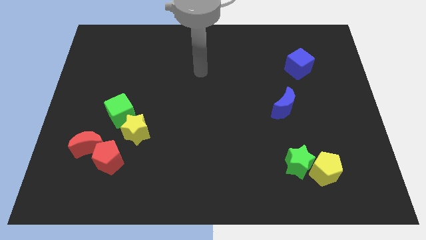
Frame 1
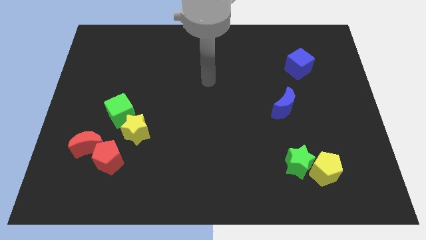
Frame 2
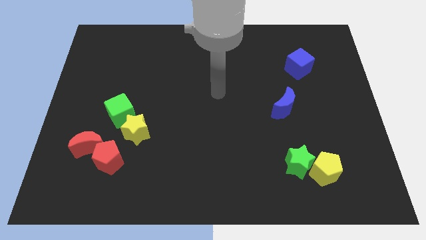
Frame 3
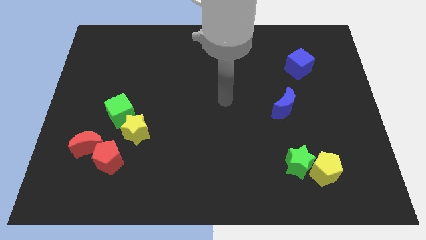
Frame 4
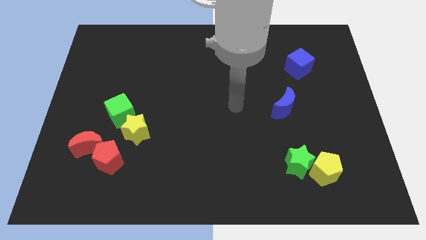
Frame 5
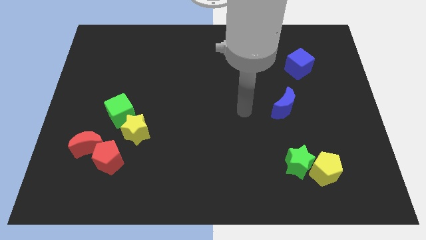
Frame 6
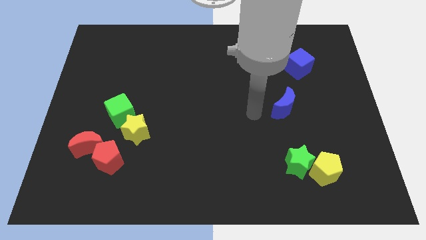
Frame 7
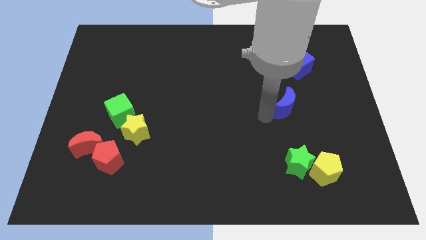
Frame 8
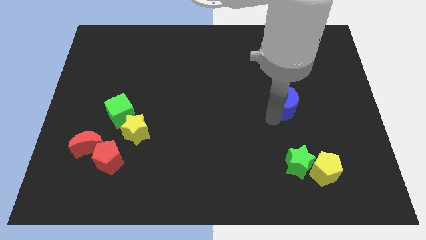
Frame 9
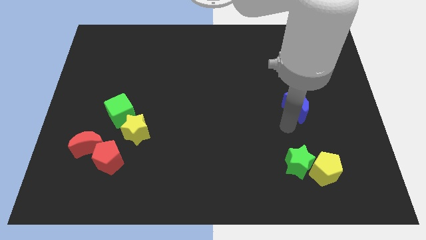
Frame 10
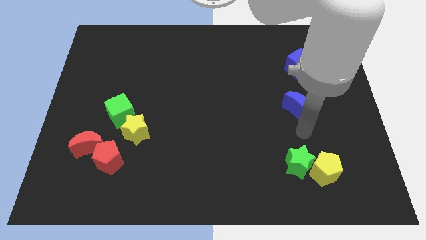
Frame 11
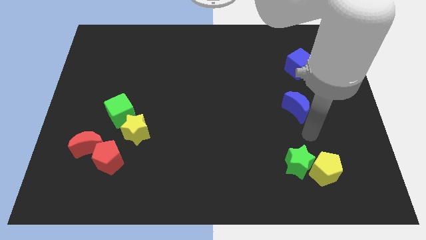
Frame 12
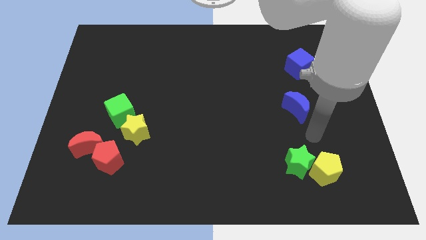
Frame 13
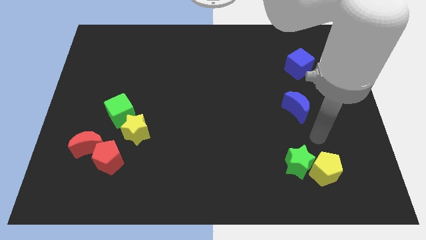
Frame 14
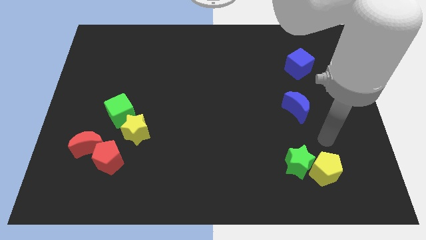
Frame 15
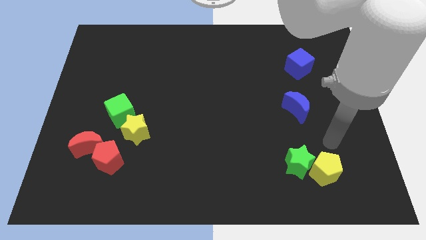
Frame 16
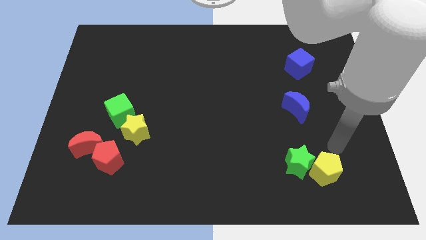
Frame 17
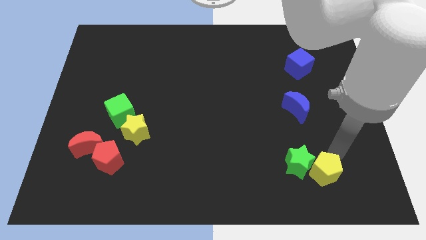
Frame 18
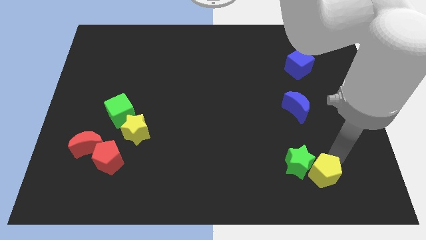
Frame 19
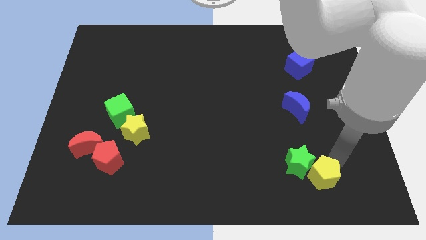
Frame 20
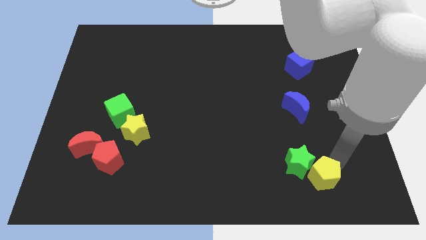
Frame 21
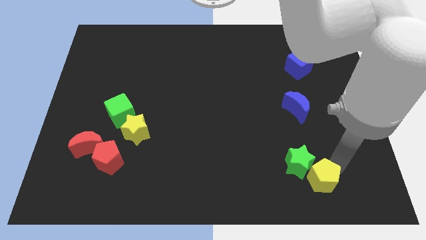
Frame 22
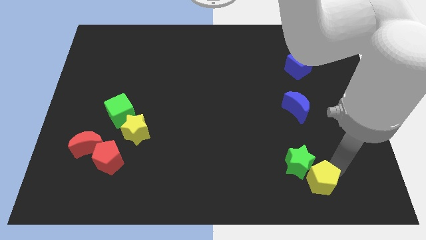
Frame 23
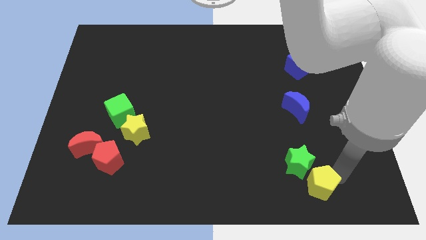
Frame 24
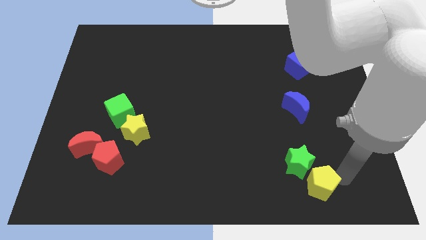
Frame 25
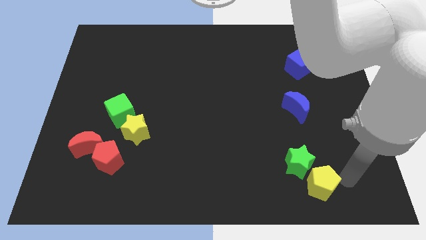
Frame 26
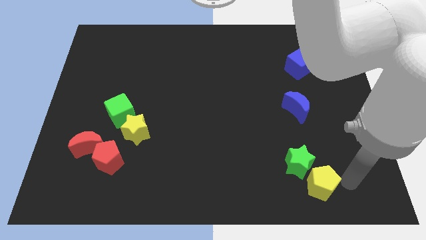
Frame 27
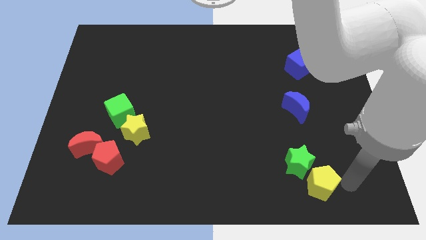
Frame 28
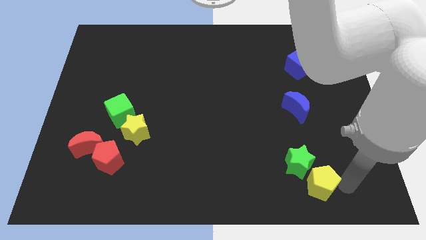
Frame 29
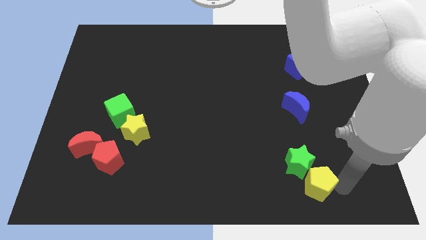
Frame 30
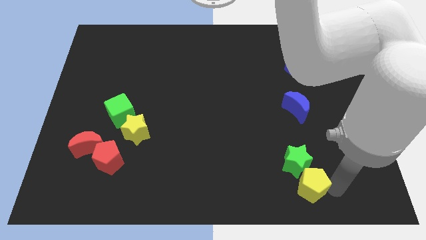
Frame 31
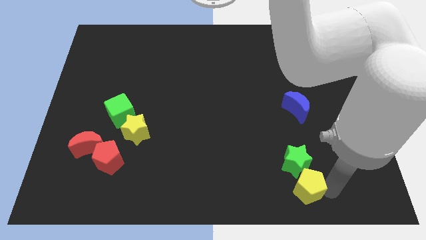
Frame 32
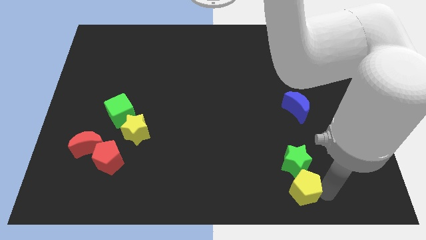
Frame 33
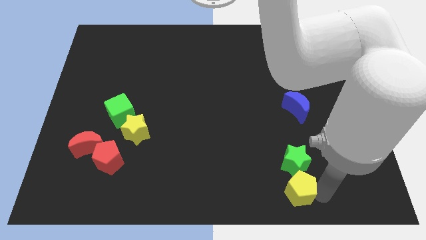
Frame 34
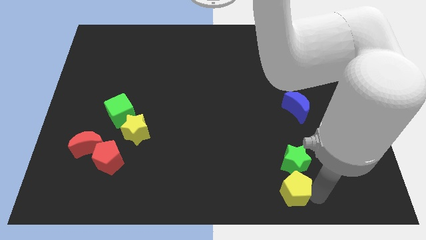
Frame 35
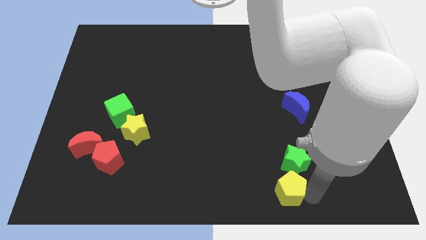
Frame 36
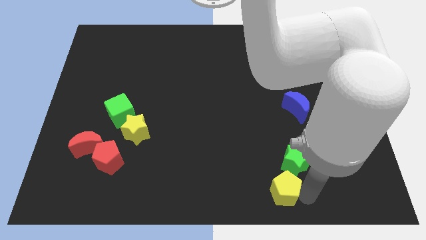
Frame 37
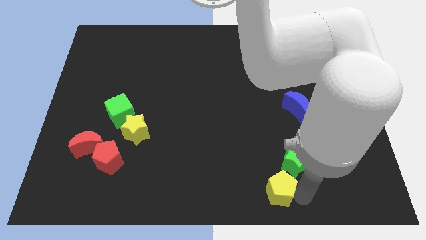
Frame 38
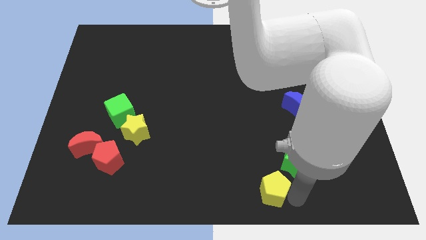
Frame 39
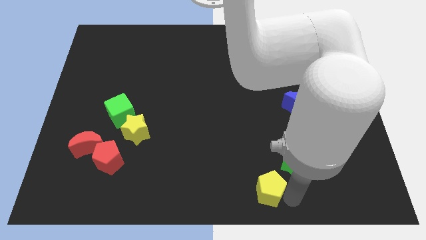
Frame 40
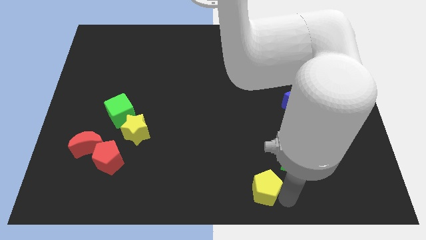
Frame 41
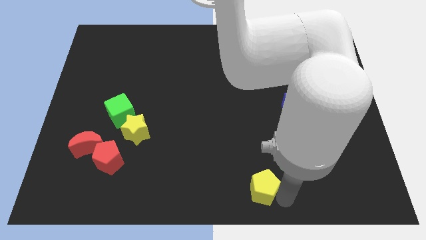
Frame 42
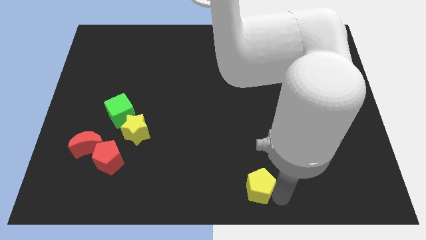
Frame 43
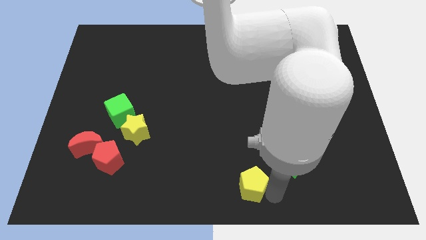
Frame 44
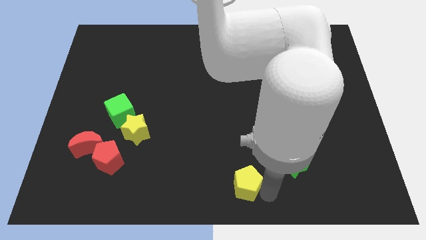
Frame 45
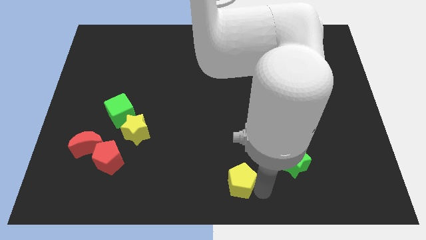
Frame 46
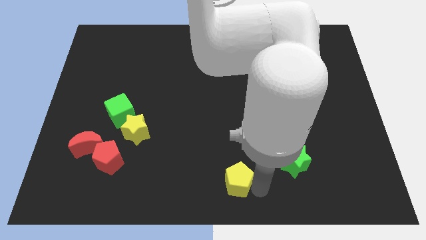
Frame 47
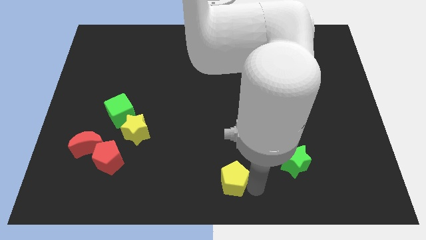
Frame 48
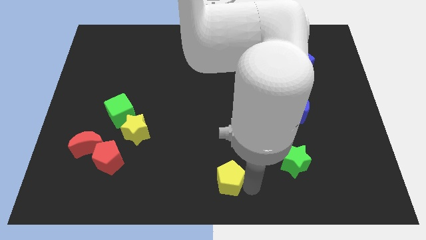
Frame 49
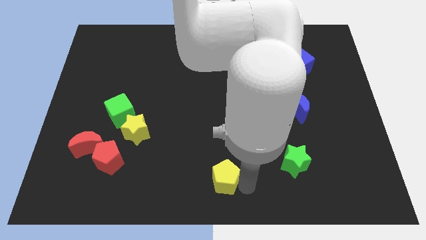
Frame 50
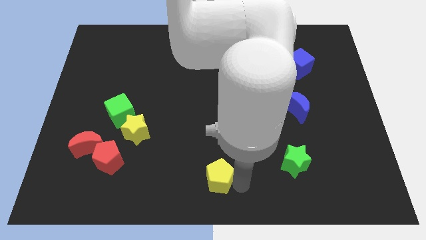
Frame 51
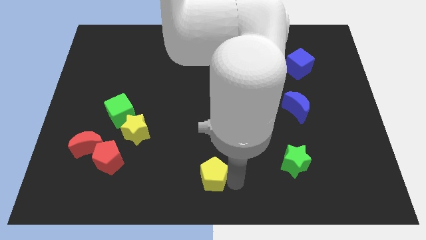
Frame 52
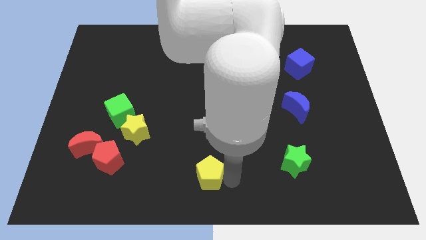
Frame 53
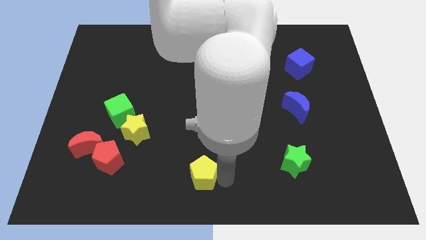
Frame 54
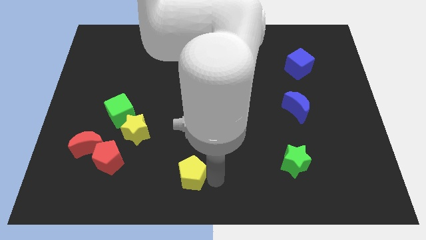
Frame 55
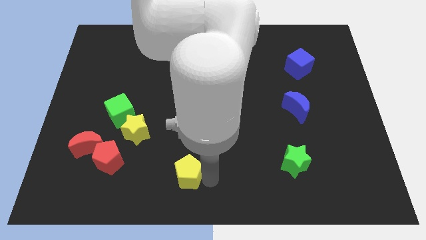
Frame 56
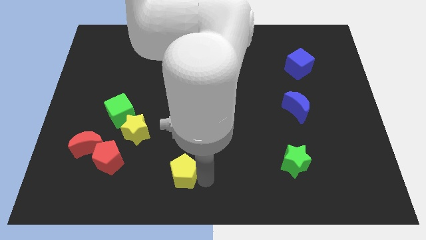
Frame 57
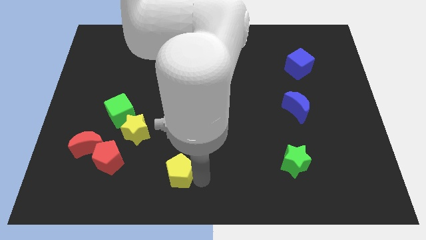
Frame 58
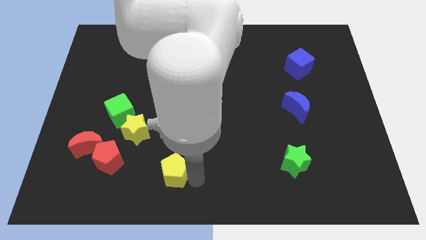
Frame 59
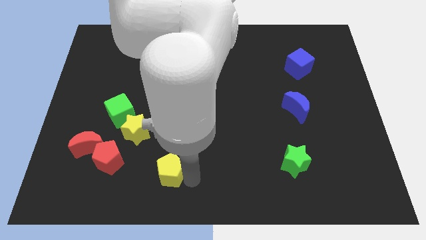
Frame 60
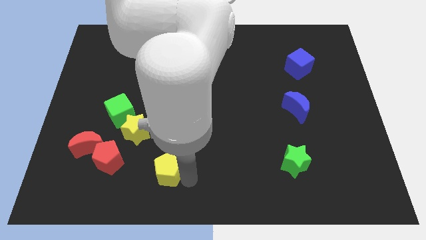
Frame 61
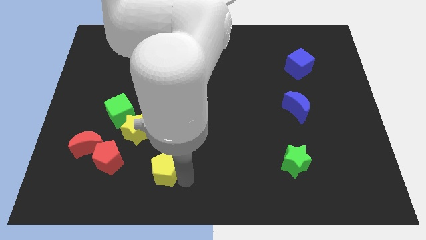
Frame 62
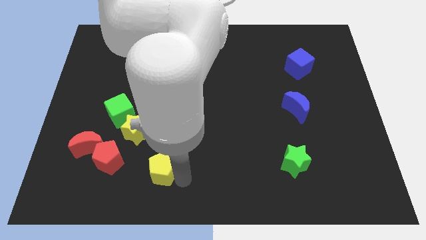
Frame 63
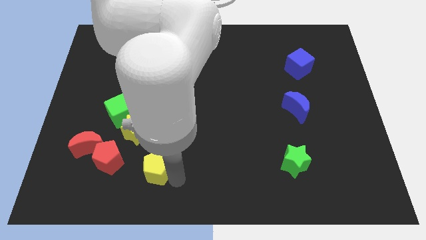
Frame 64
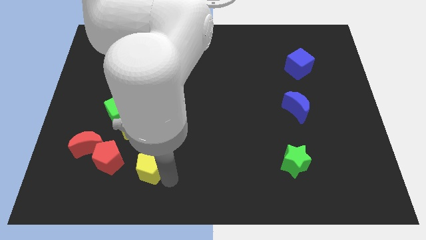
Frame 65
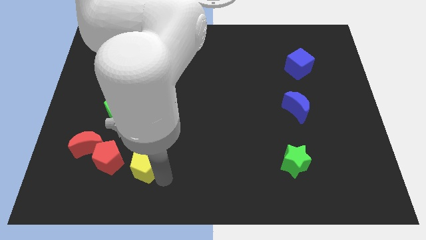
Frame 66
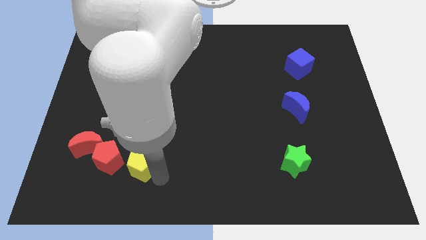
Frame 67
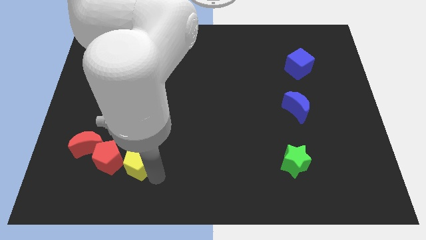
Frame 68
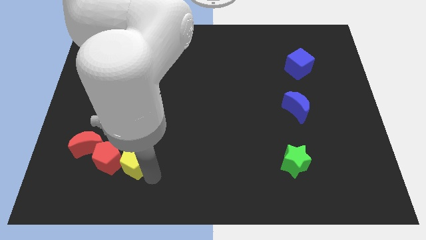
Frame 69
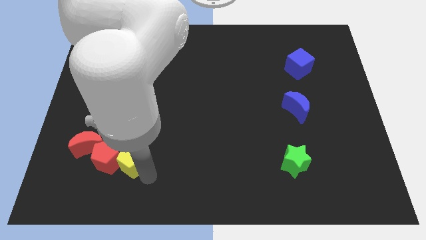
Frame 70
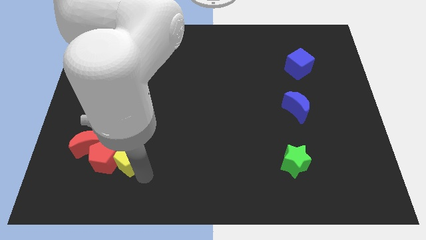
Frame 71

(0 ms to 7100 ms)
move the yellow pentagon close to the red pentagon

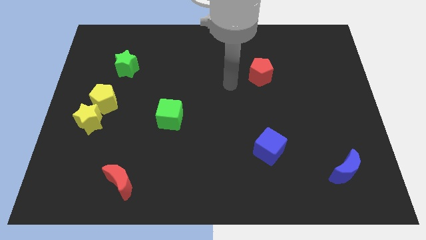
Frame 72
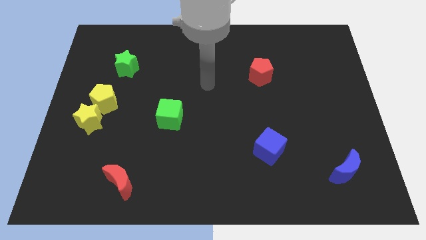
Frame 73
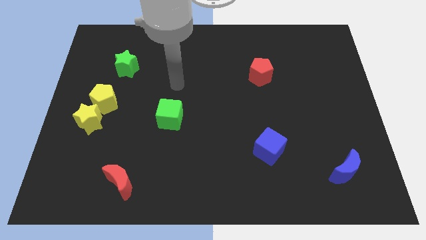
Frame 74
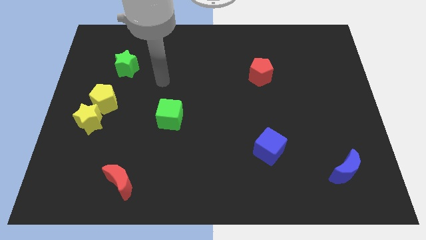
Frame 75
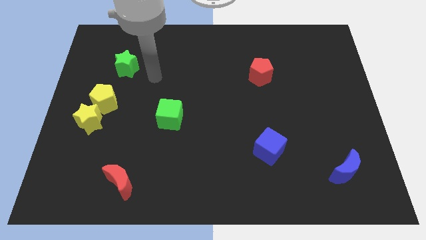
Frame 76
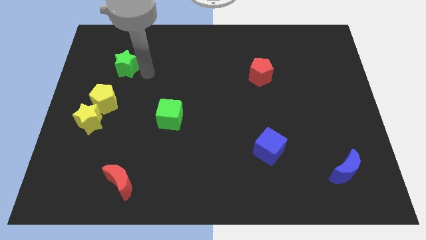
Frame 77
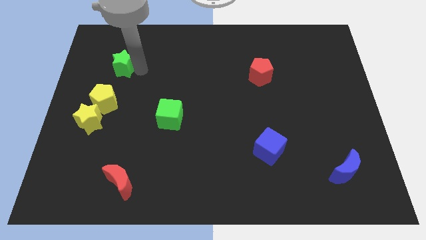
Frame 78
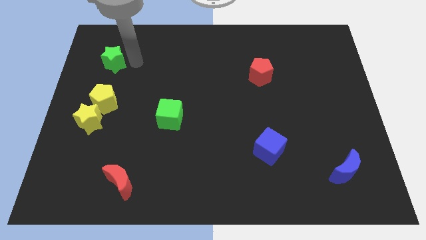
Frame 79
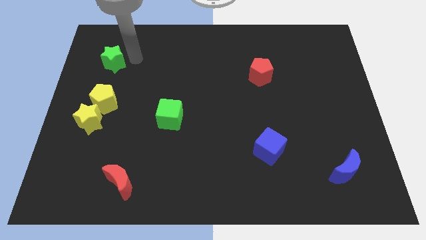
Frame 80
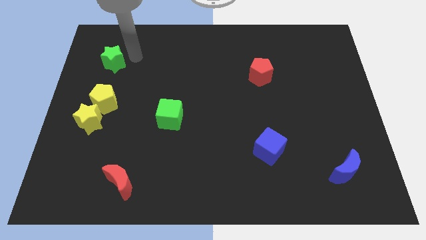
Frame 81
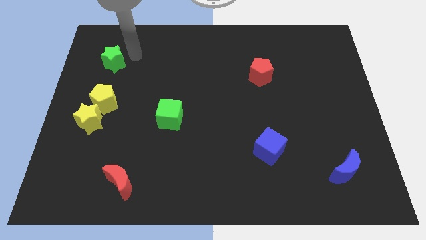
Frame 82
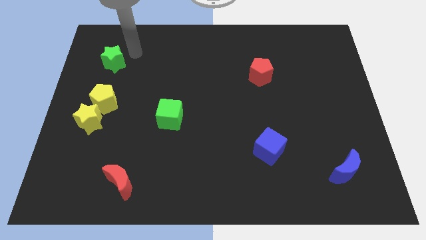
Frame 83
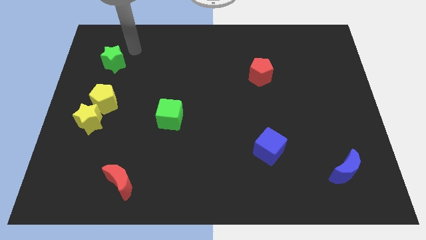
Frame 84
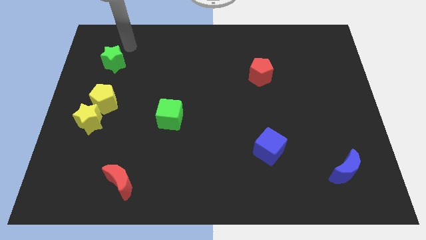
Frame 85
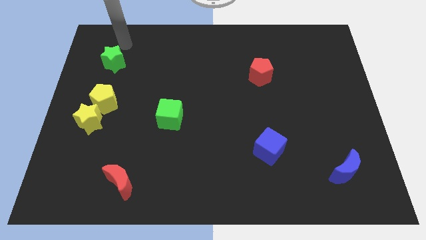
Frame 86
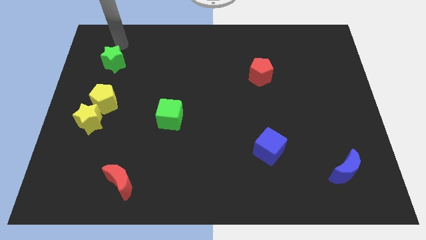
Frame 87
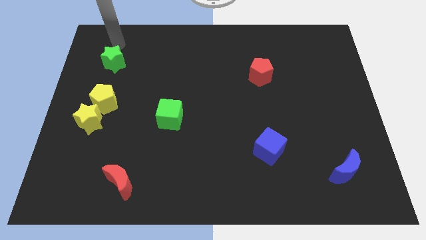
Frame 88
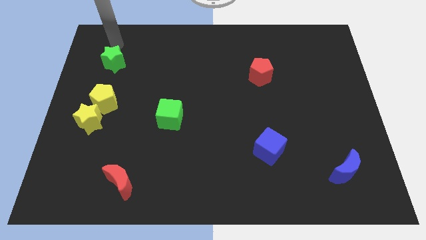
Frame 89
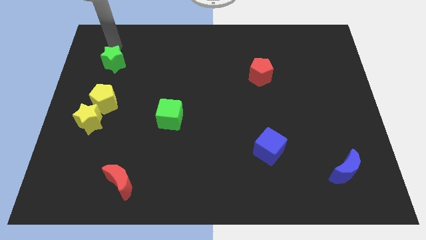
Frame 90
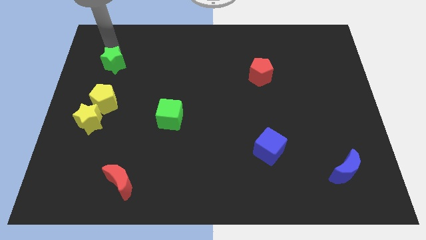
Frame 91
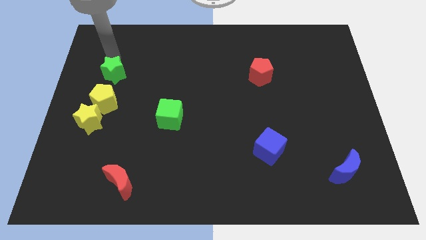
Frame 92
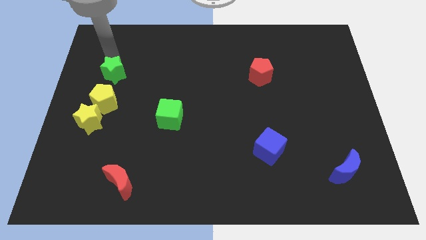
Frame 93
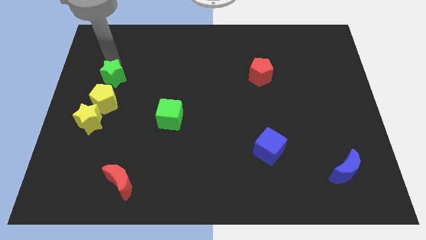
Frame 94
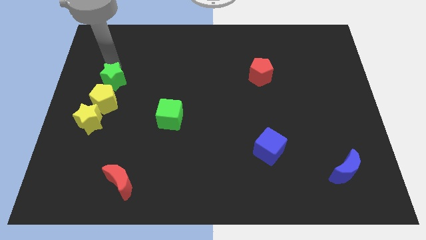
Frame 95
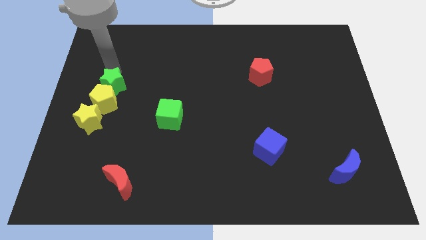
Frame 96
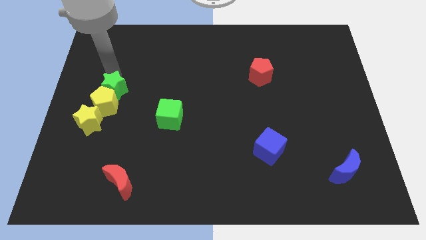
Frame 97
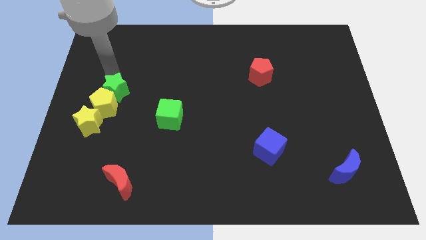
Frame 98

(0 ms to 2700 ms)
move the green star towards the yellow pentagon
